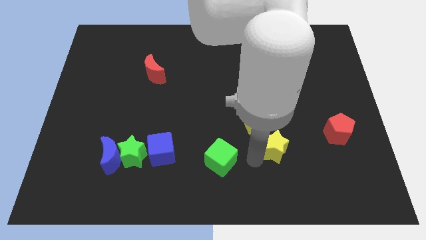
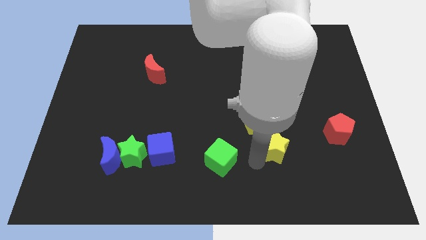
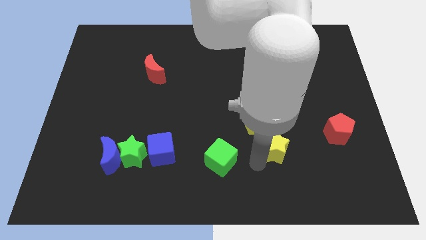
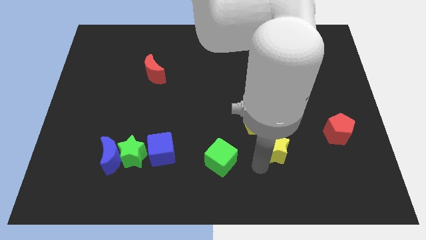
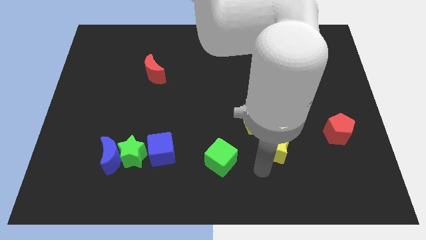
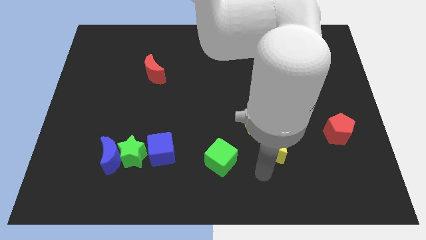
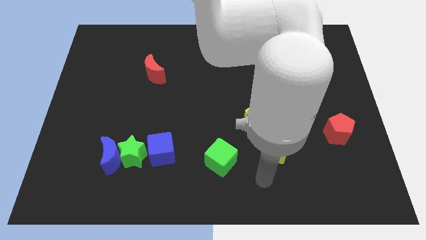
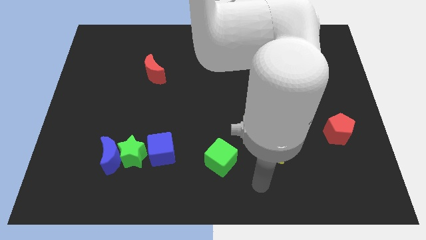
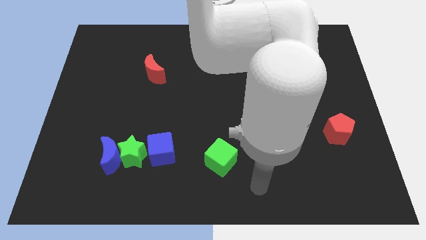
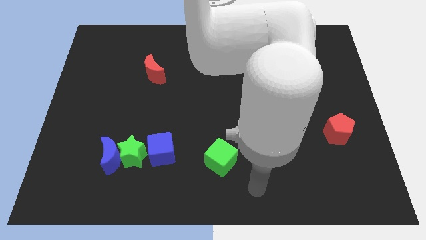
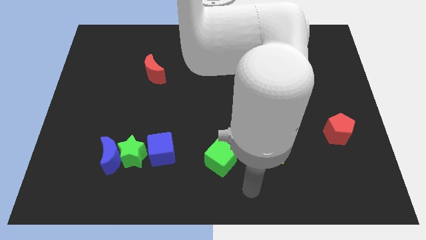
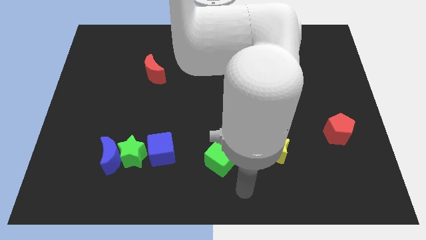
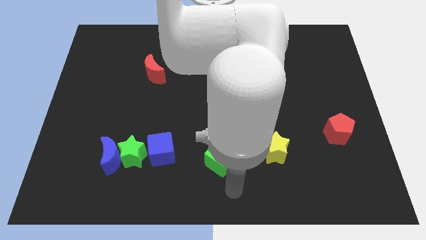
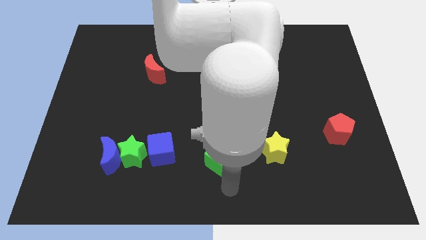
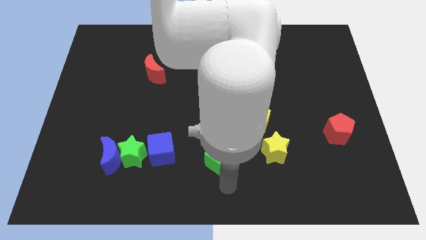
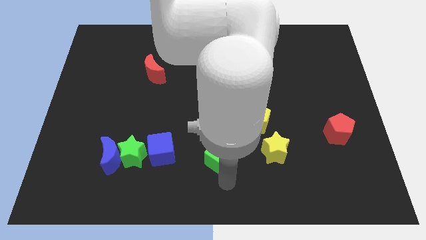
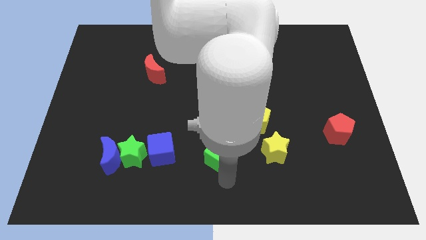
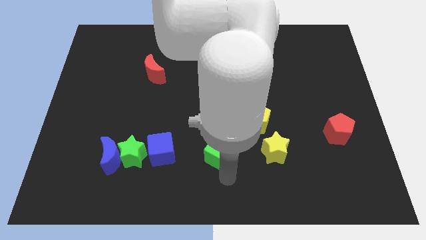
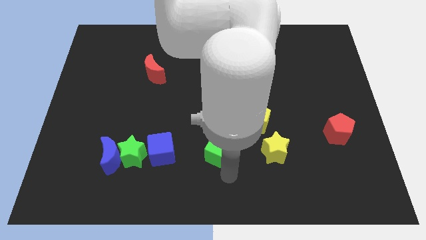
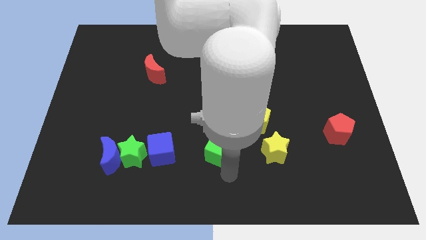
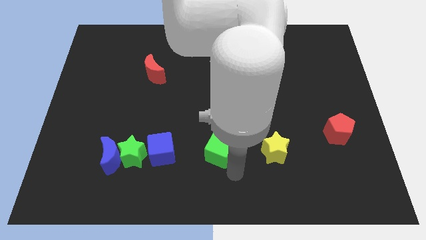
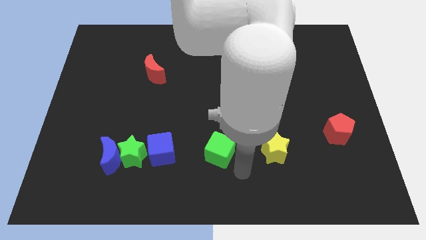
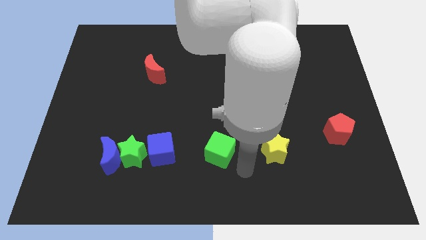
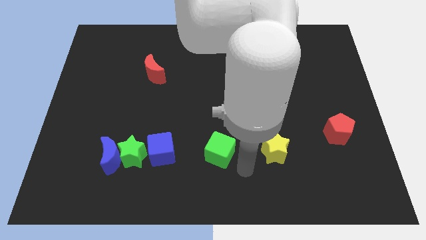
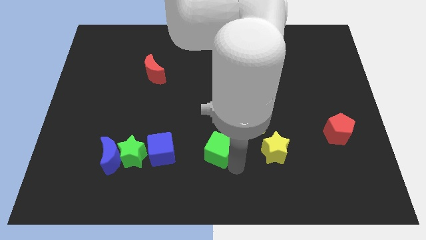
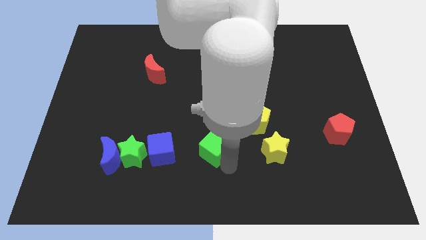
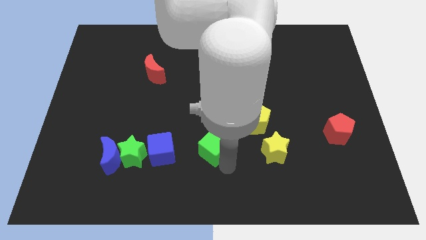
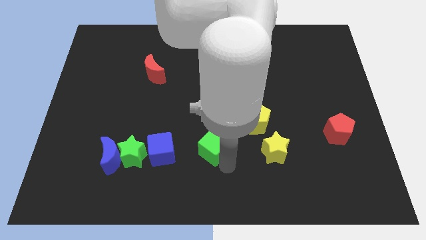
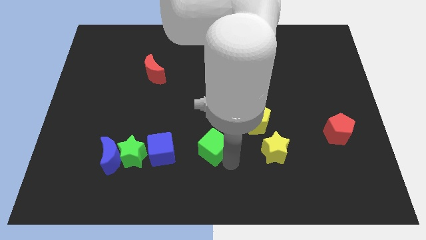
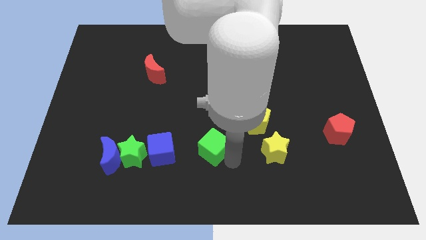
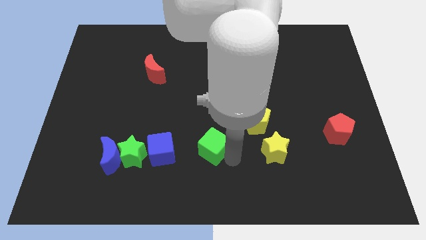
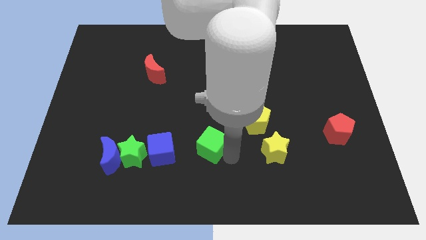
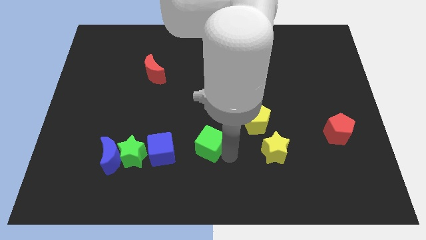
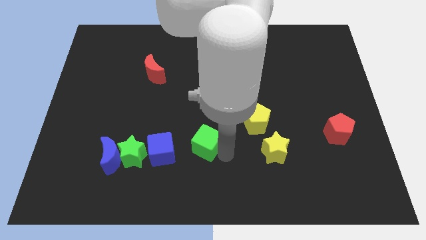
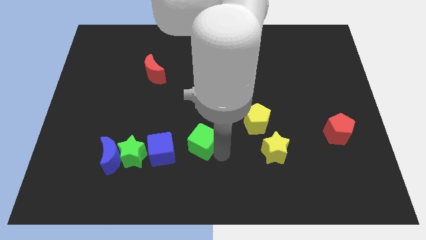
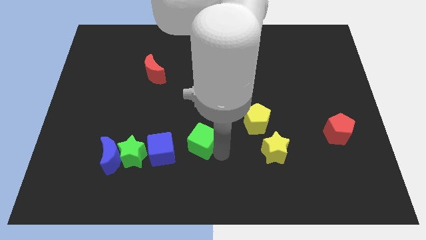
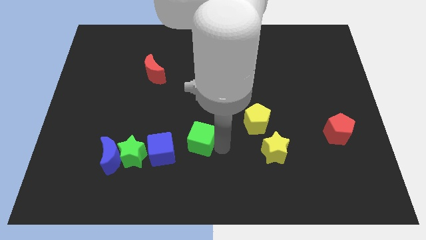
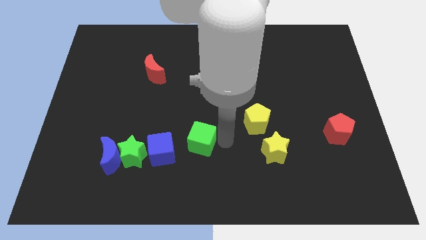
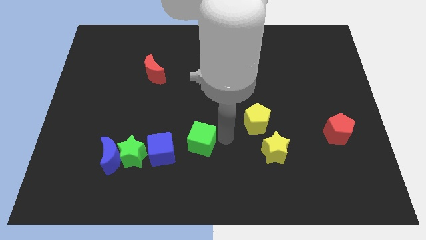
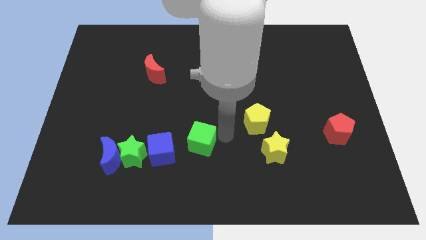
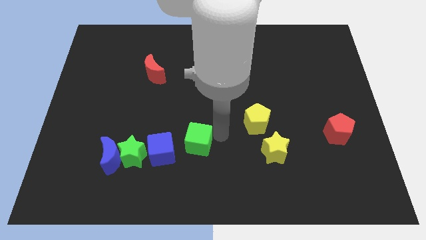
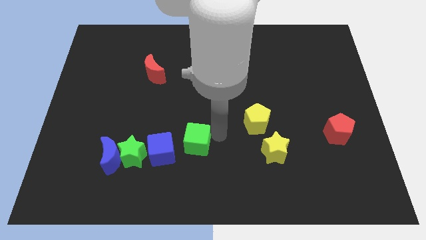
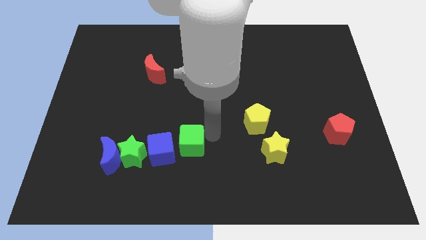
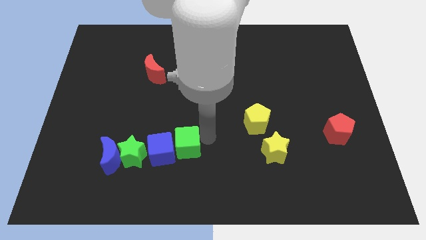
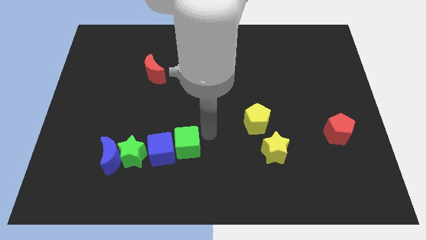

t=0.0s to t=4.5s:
move the green cube to the right of the blue cube

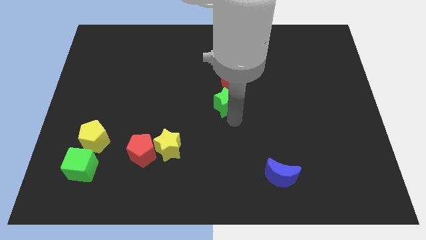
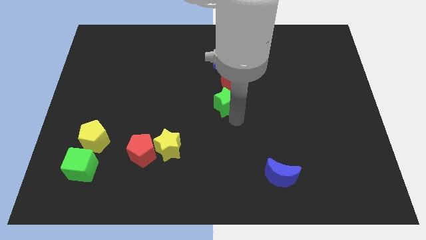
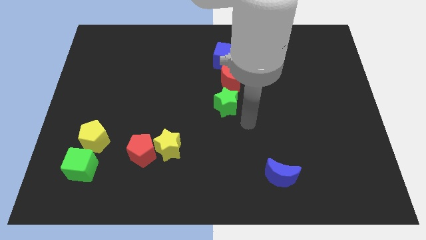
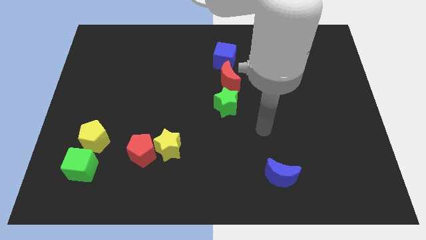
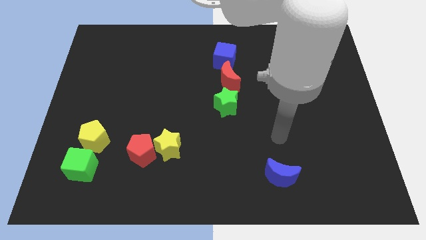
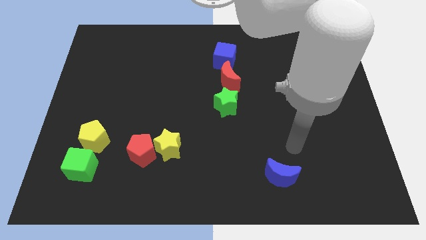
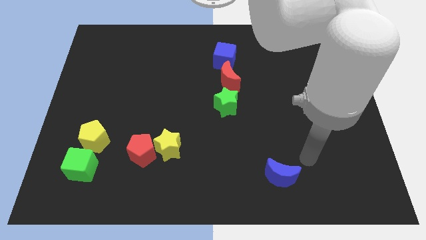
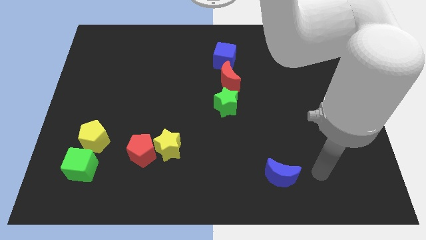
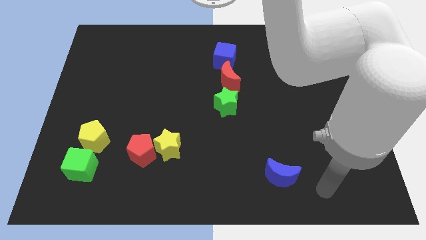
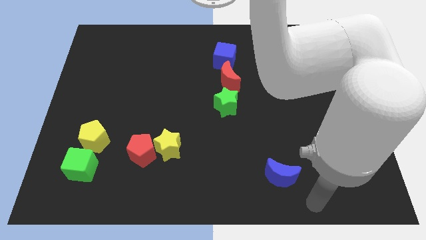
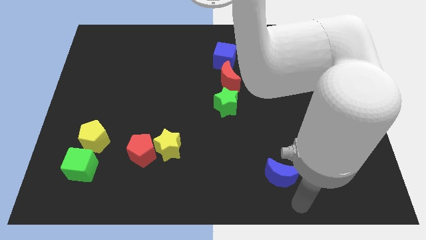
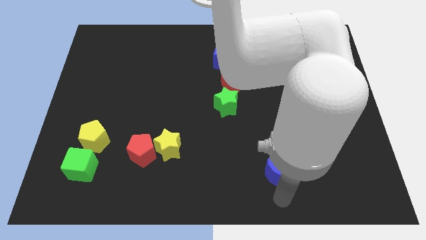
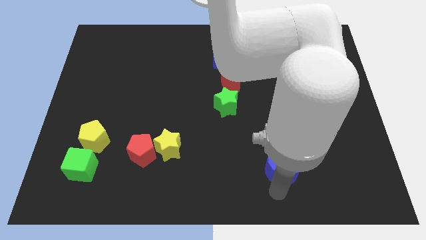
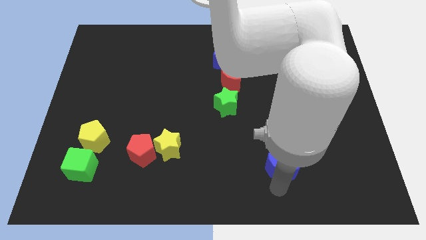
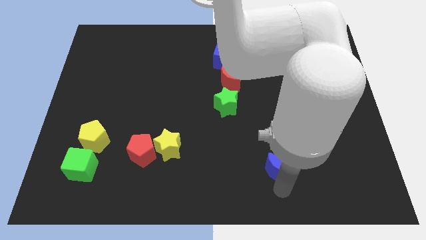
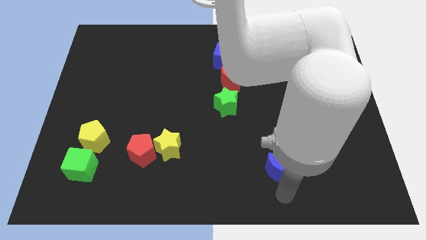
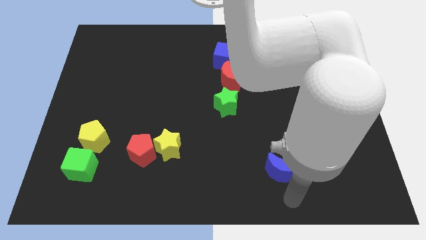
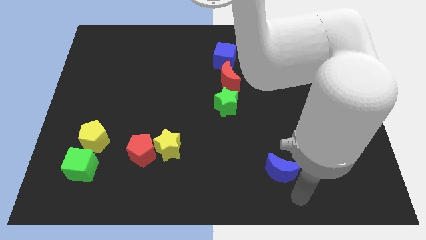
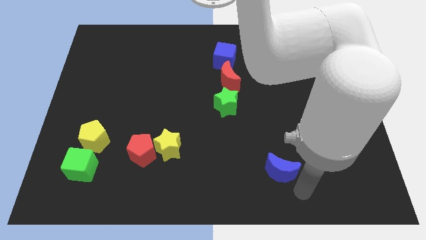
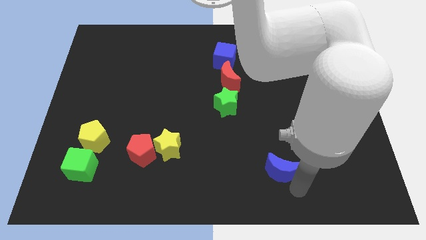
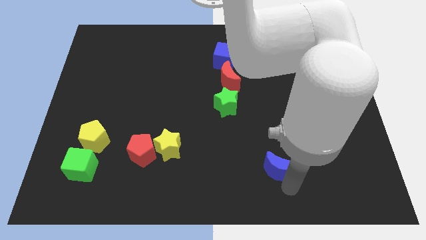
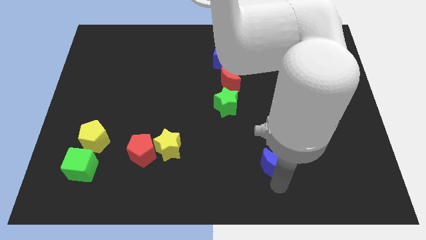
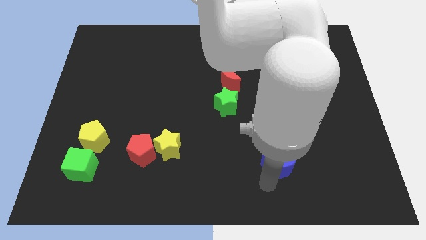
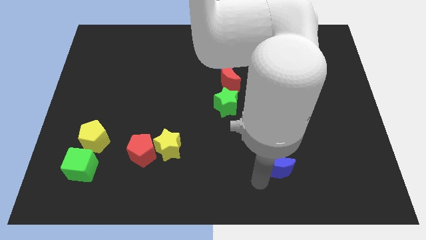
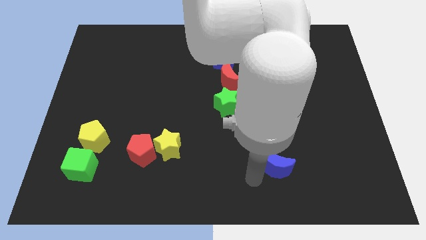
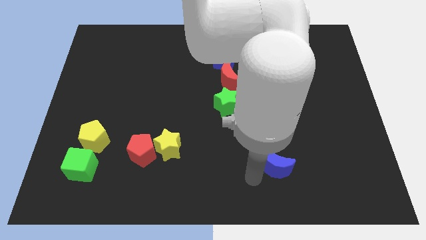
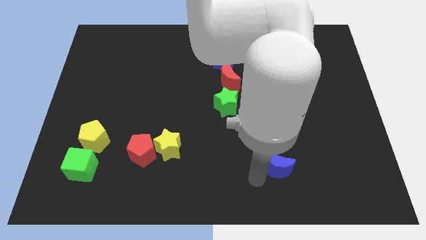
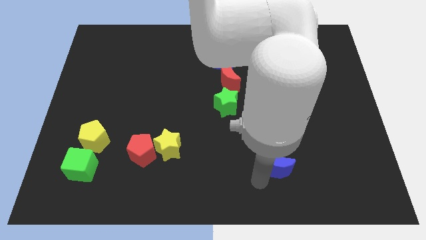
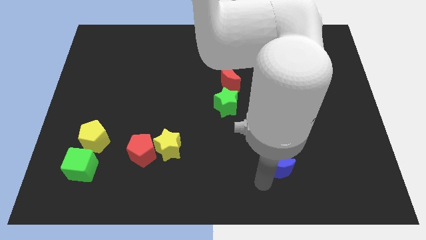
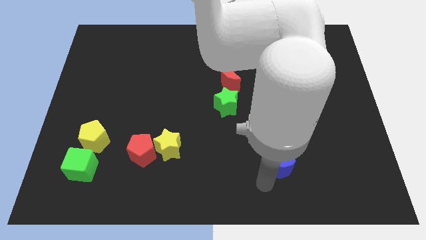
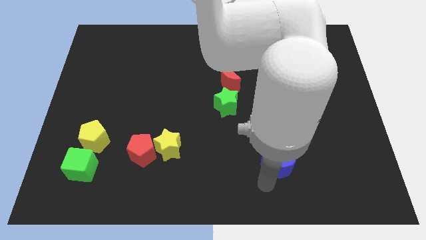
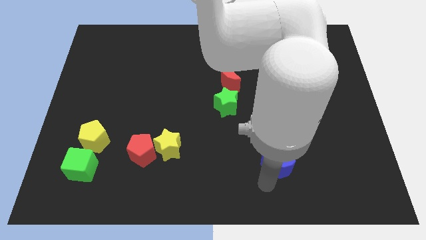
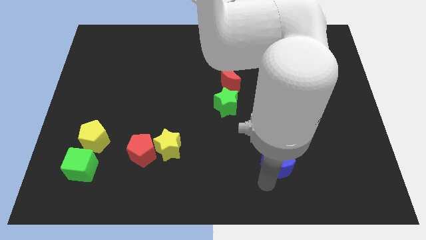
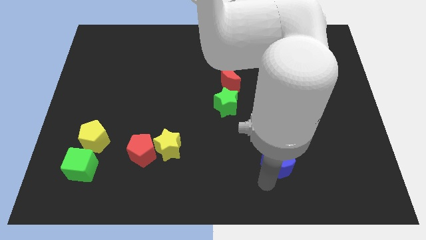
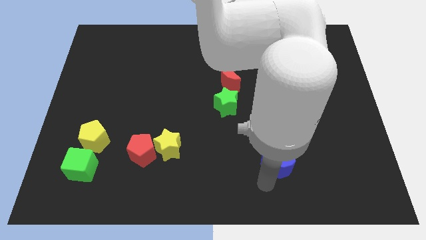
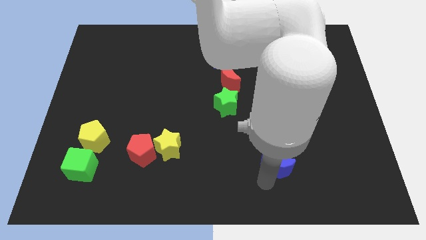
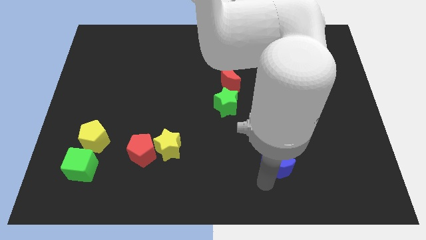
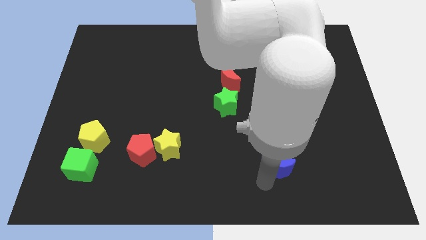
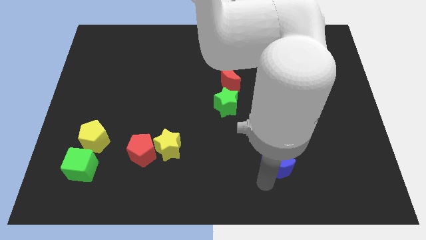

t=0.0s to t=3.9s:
slightly push the blue moon towards the top side of the board

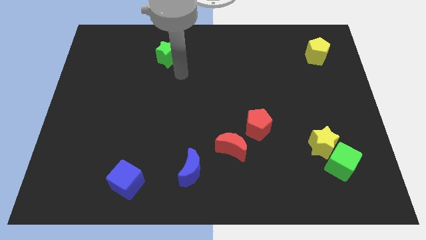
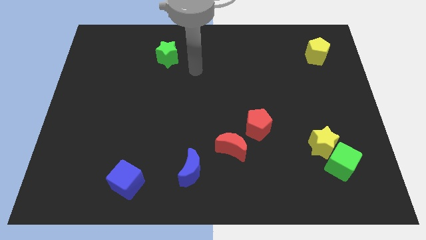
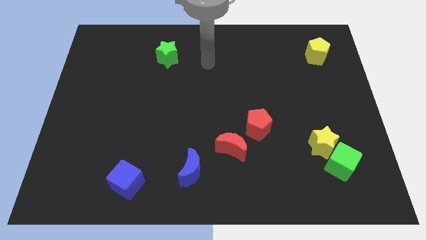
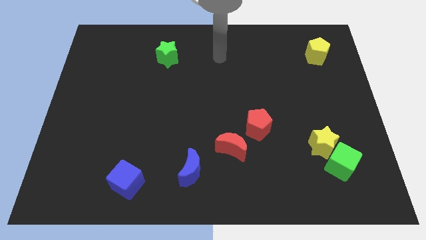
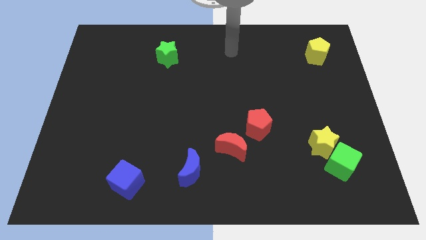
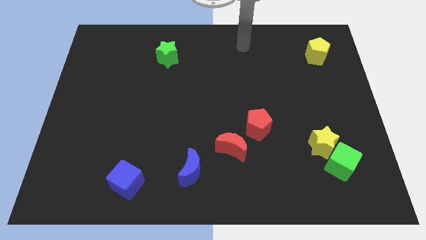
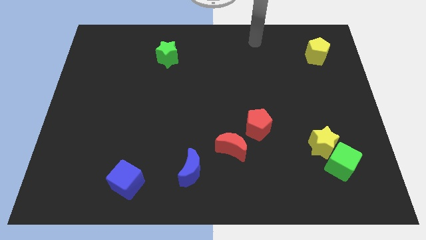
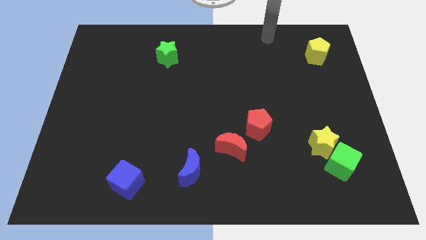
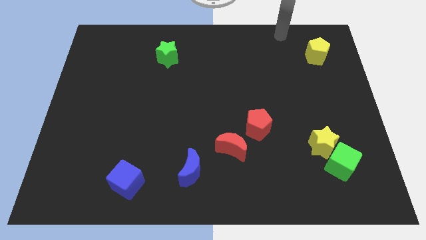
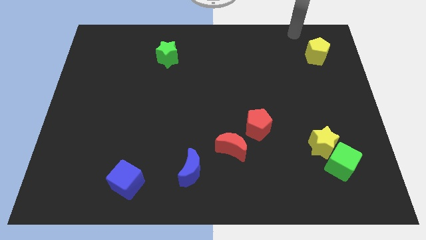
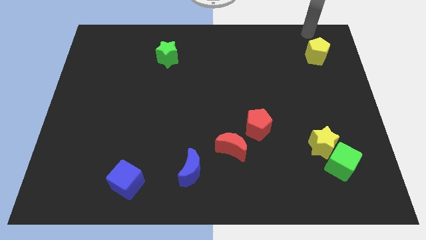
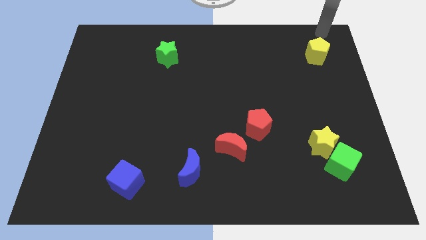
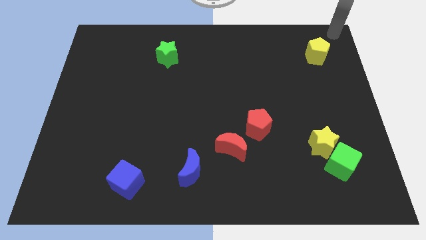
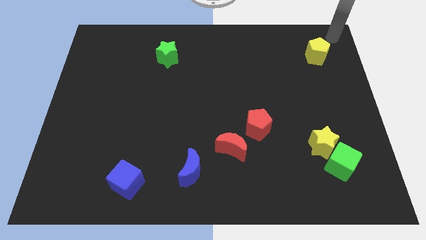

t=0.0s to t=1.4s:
place the arm above to the yellow pentagon
